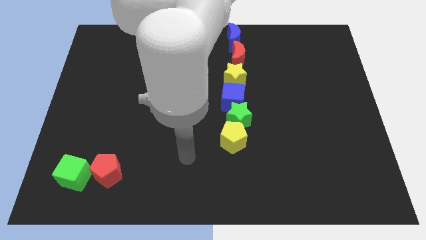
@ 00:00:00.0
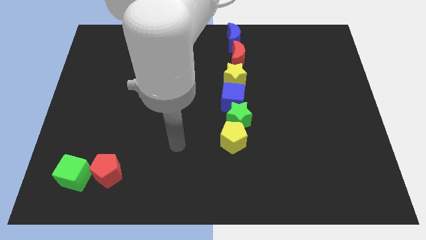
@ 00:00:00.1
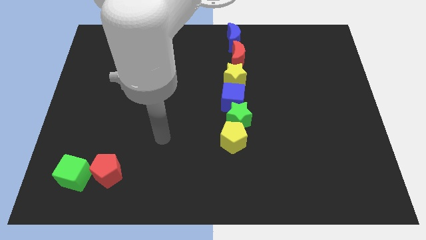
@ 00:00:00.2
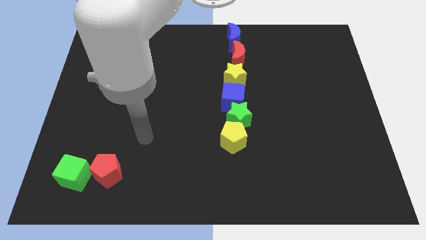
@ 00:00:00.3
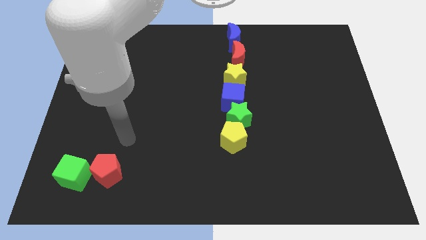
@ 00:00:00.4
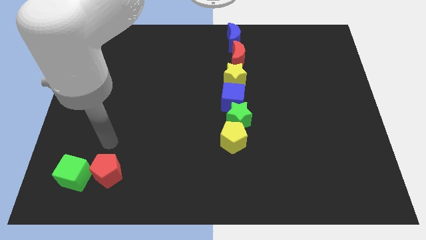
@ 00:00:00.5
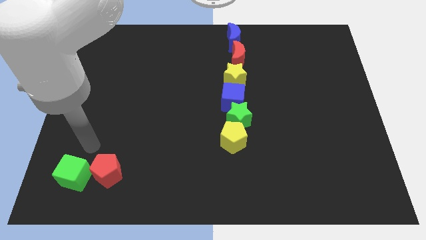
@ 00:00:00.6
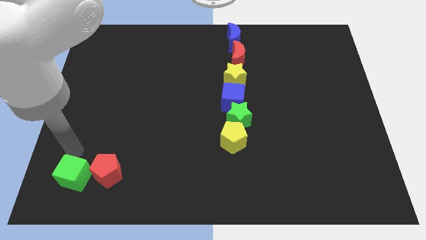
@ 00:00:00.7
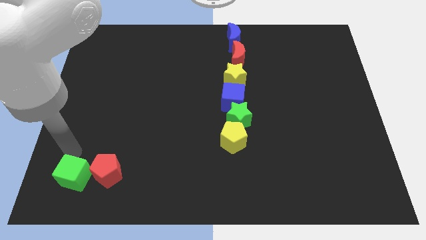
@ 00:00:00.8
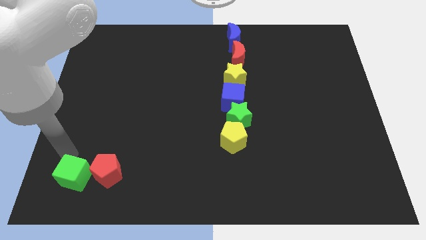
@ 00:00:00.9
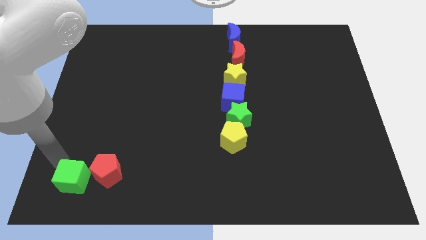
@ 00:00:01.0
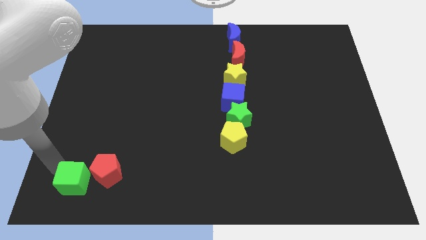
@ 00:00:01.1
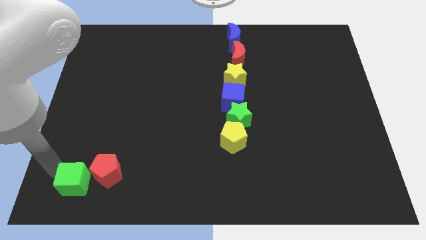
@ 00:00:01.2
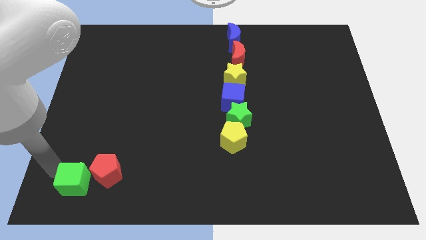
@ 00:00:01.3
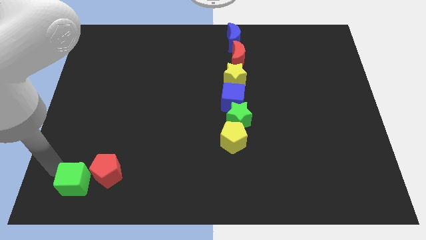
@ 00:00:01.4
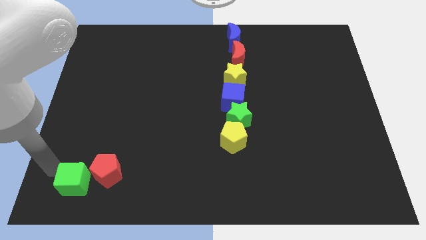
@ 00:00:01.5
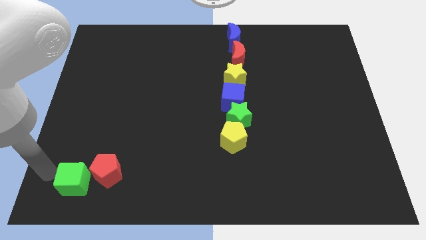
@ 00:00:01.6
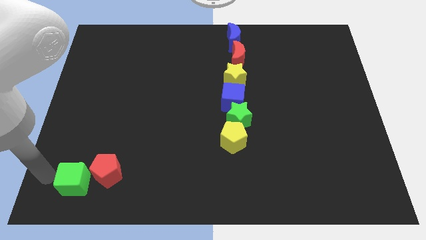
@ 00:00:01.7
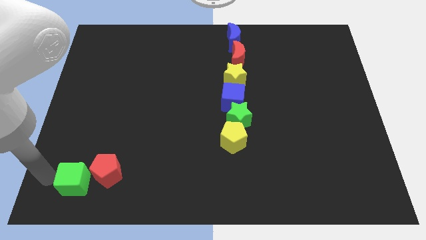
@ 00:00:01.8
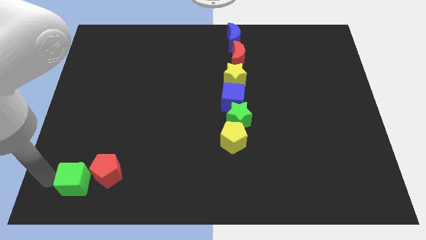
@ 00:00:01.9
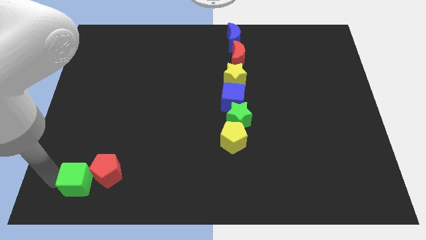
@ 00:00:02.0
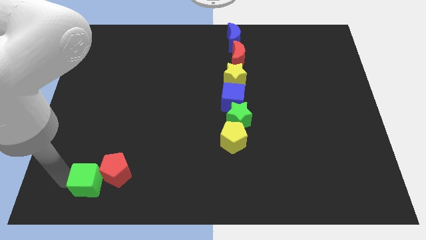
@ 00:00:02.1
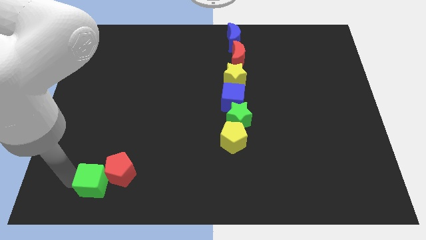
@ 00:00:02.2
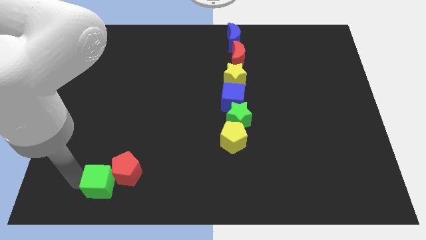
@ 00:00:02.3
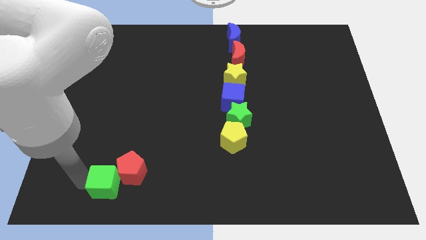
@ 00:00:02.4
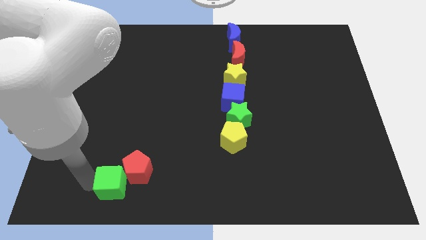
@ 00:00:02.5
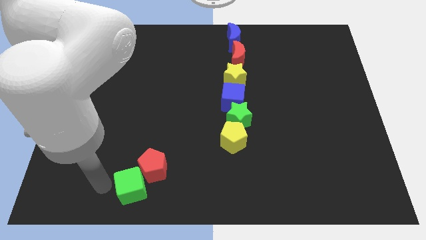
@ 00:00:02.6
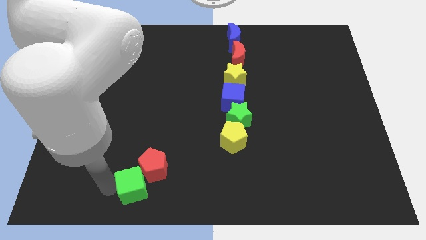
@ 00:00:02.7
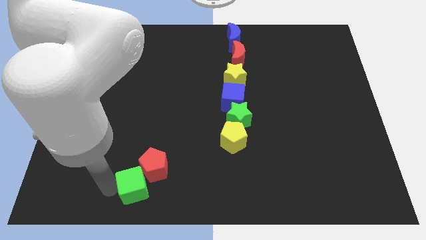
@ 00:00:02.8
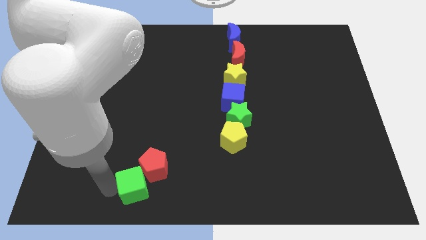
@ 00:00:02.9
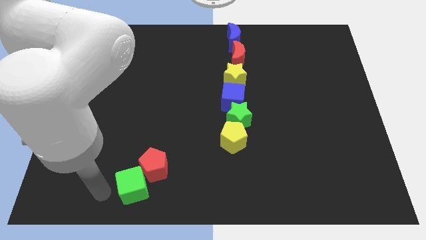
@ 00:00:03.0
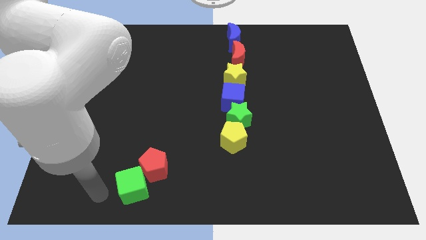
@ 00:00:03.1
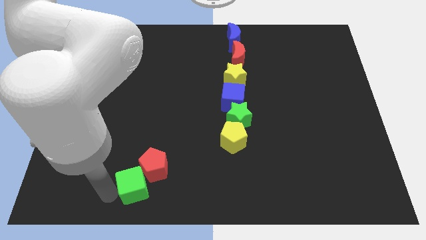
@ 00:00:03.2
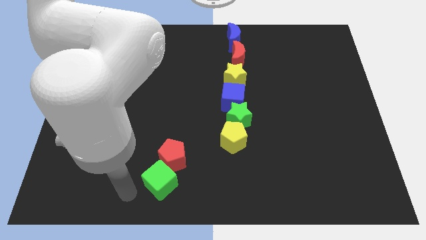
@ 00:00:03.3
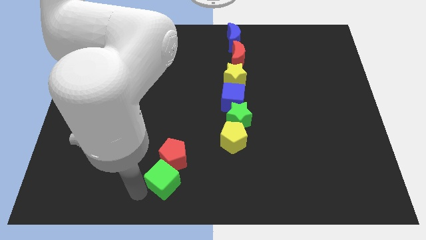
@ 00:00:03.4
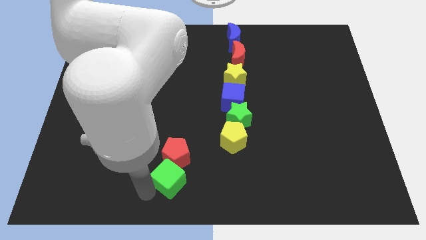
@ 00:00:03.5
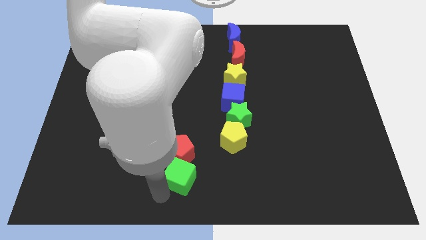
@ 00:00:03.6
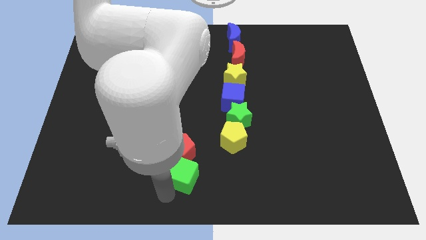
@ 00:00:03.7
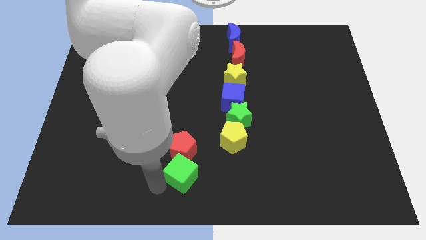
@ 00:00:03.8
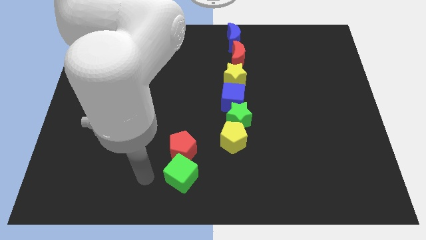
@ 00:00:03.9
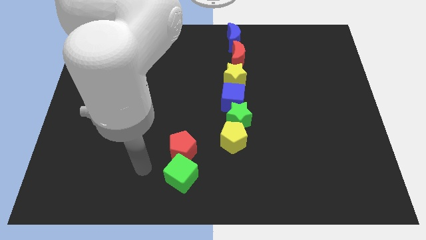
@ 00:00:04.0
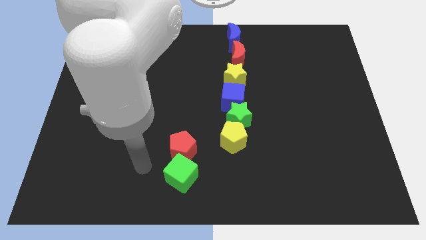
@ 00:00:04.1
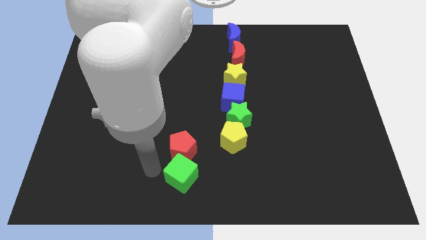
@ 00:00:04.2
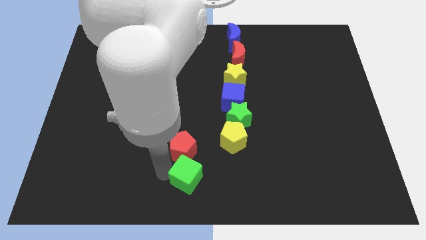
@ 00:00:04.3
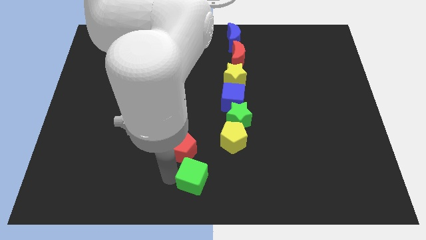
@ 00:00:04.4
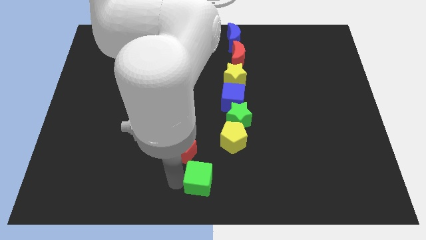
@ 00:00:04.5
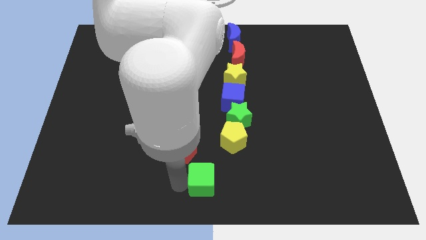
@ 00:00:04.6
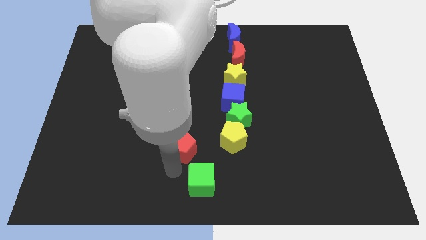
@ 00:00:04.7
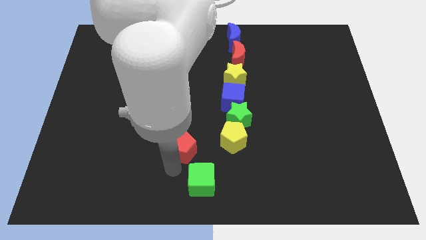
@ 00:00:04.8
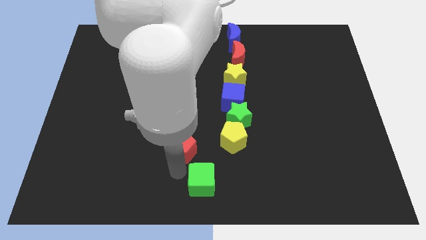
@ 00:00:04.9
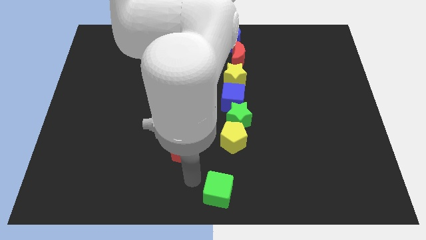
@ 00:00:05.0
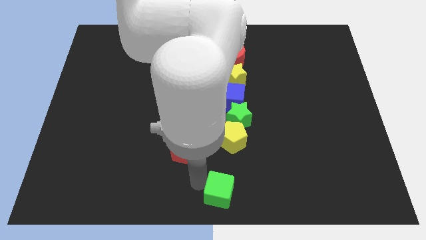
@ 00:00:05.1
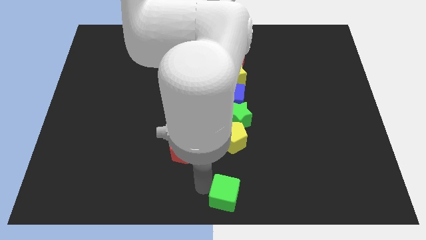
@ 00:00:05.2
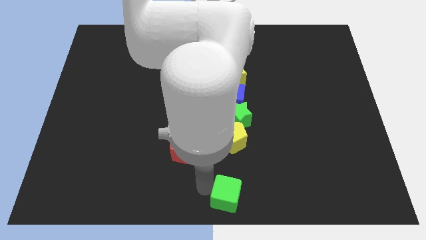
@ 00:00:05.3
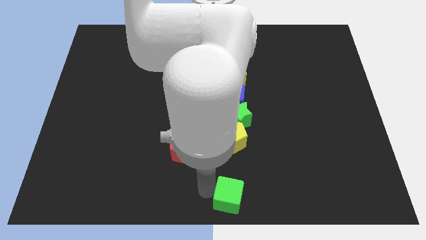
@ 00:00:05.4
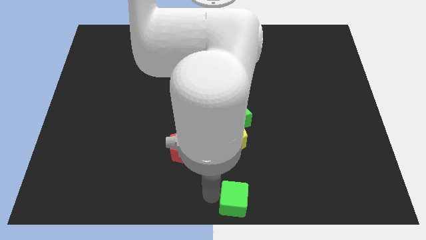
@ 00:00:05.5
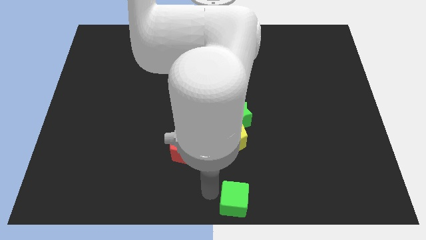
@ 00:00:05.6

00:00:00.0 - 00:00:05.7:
place the green cube to the bottom center of the board

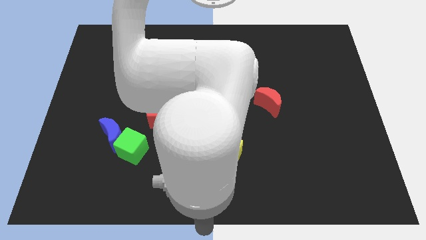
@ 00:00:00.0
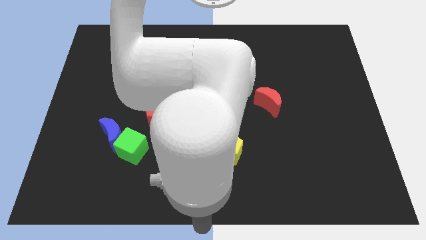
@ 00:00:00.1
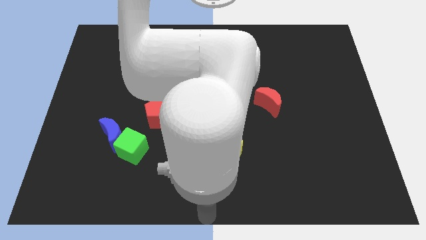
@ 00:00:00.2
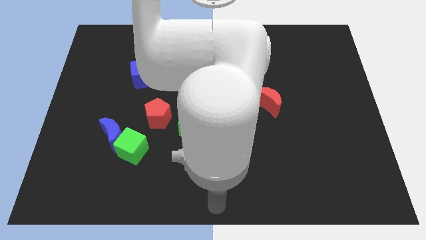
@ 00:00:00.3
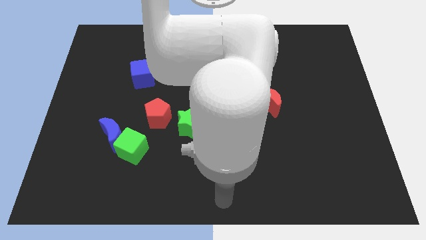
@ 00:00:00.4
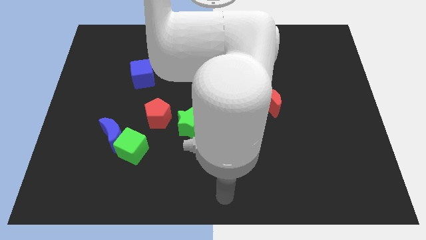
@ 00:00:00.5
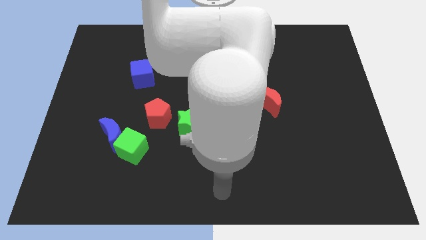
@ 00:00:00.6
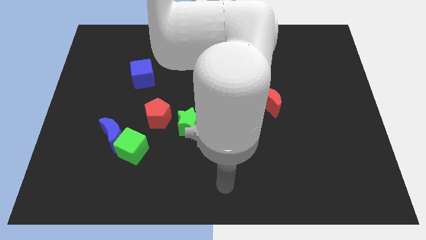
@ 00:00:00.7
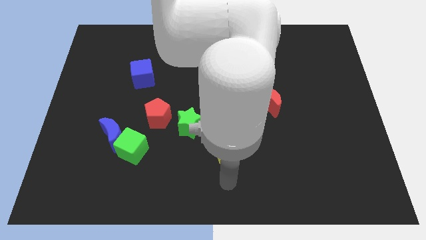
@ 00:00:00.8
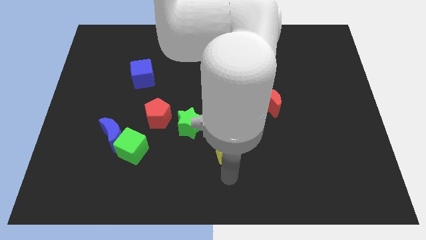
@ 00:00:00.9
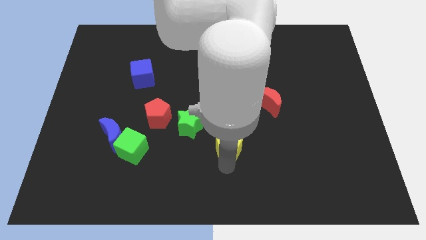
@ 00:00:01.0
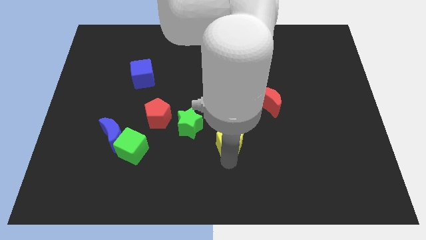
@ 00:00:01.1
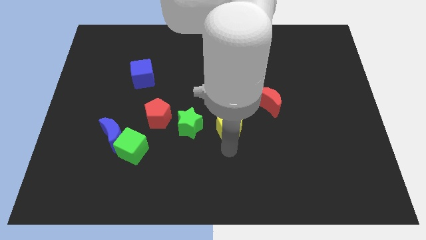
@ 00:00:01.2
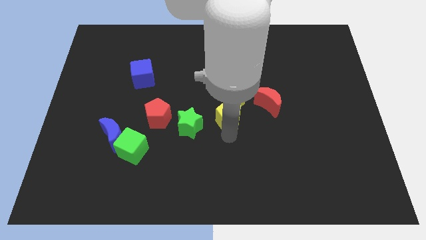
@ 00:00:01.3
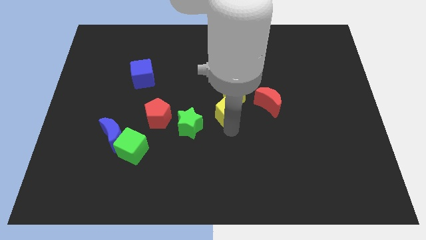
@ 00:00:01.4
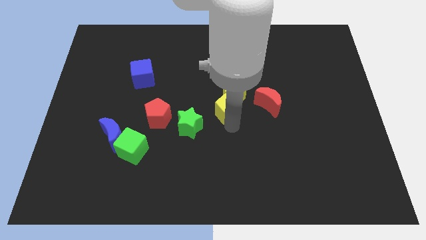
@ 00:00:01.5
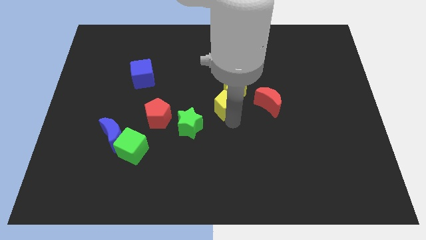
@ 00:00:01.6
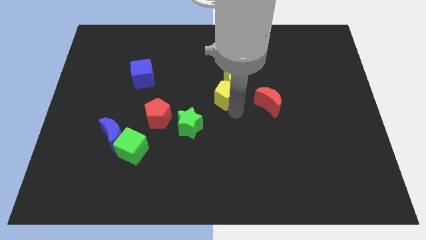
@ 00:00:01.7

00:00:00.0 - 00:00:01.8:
slide the yellow pentagon into the bottom side of the yellow star

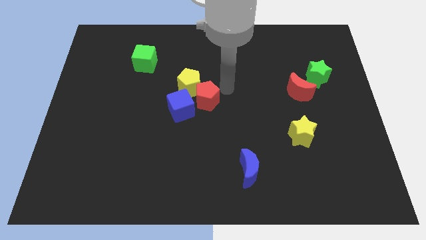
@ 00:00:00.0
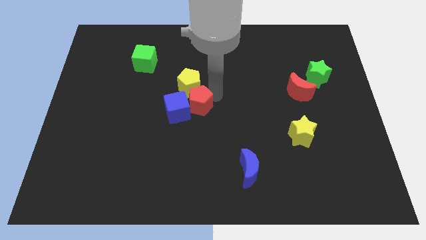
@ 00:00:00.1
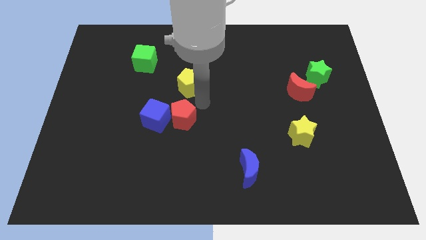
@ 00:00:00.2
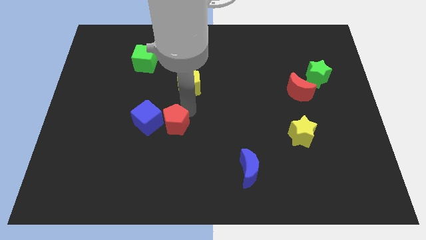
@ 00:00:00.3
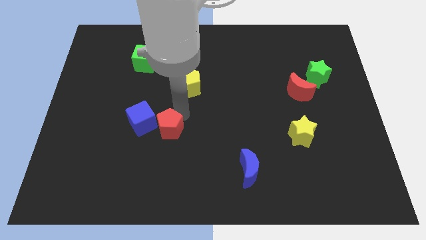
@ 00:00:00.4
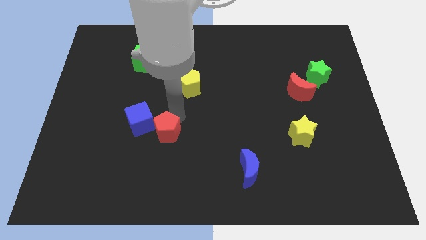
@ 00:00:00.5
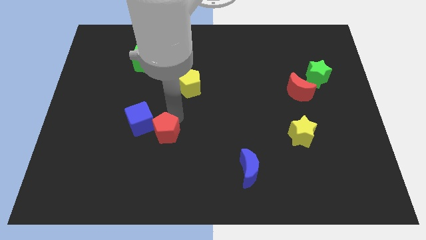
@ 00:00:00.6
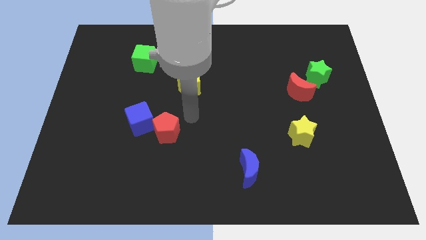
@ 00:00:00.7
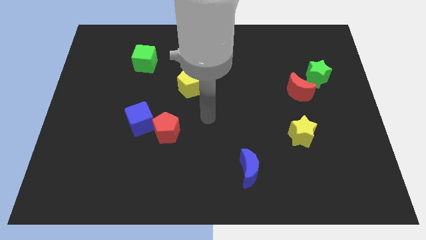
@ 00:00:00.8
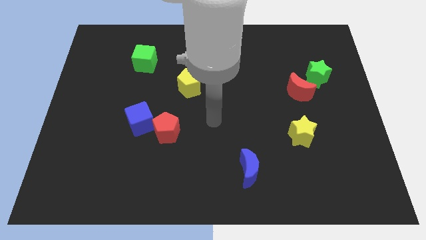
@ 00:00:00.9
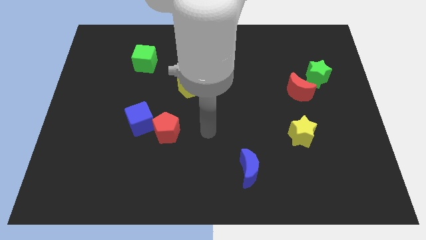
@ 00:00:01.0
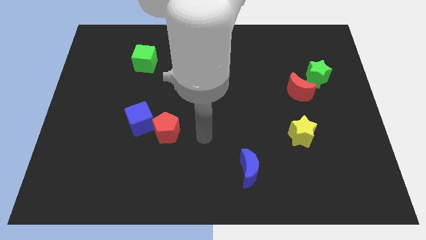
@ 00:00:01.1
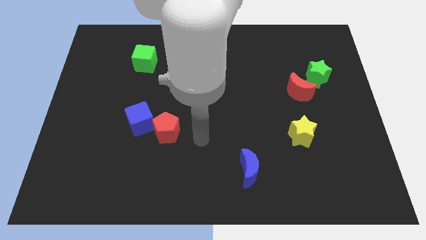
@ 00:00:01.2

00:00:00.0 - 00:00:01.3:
drag the red pentagon slightly downwards
